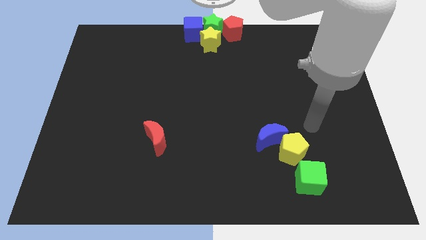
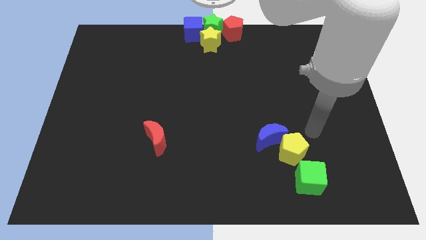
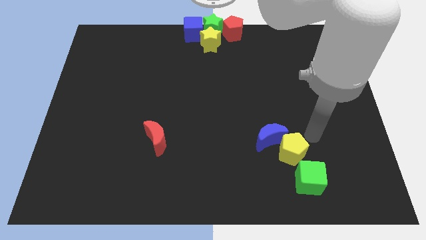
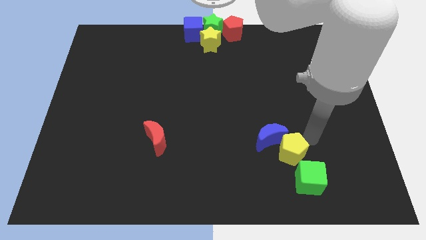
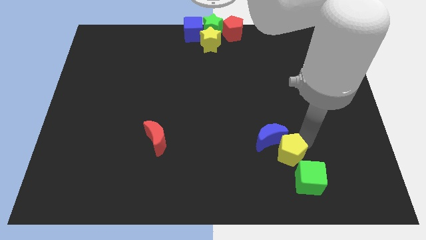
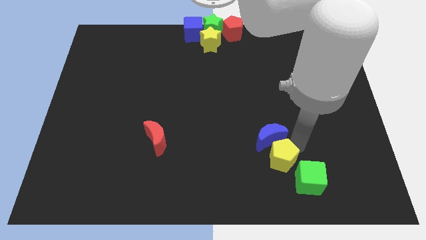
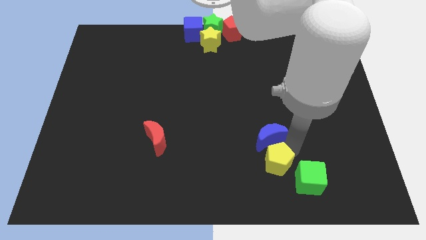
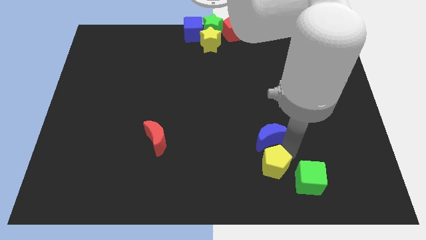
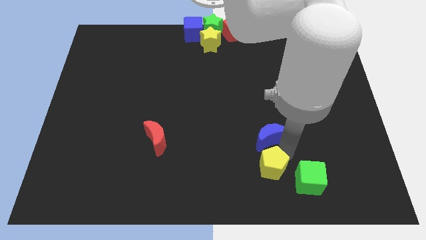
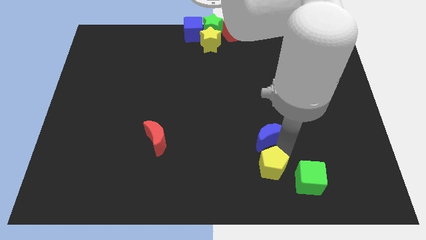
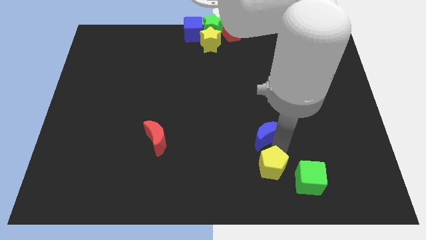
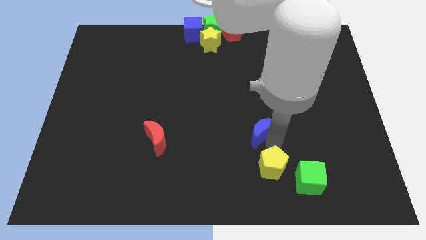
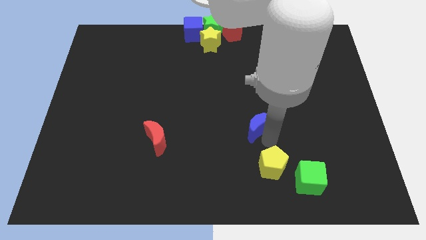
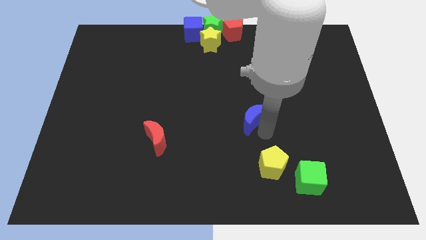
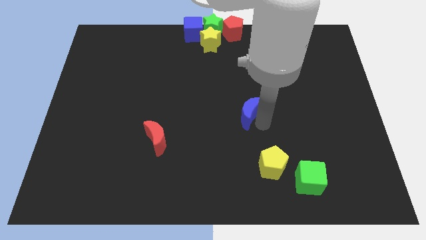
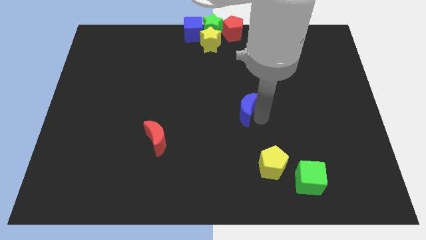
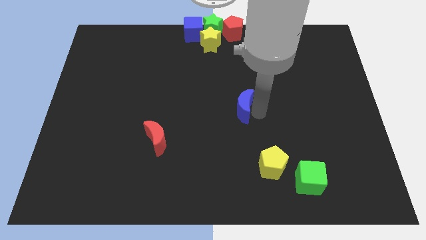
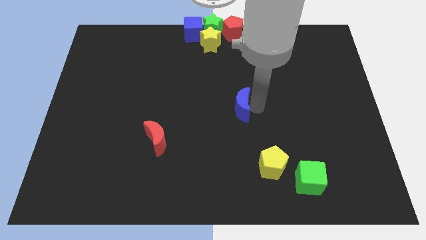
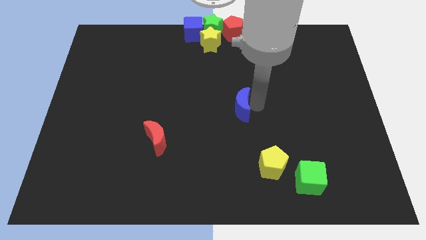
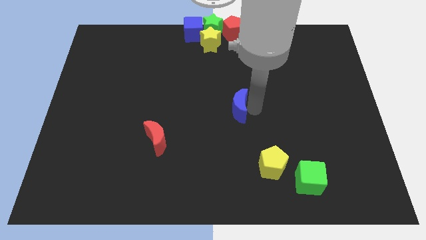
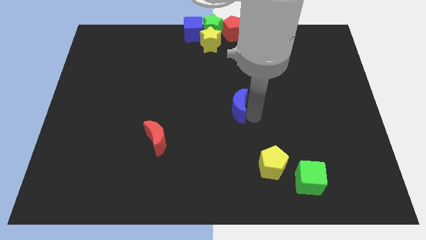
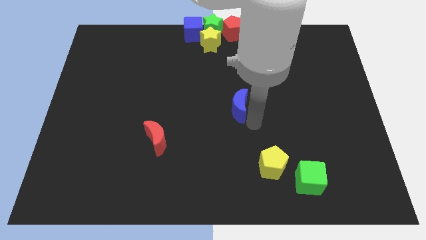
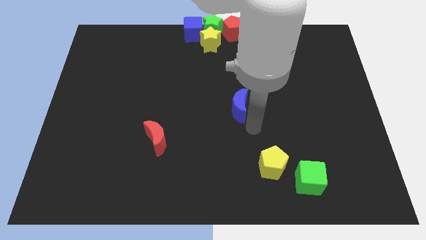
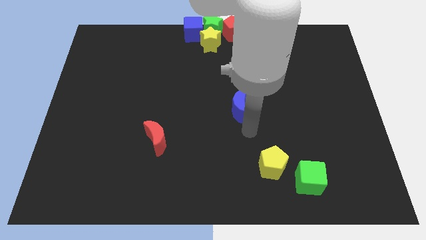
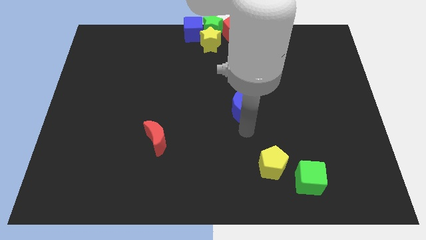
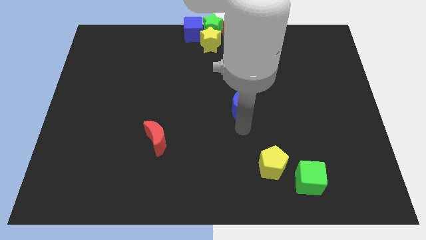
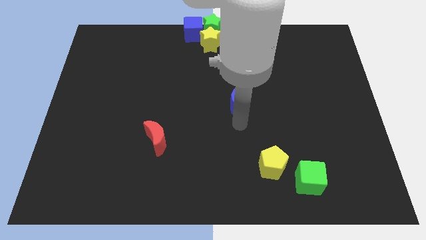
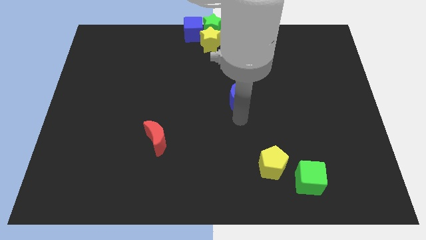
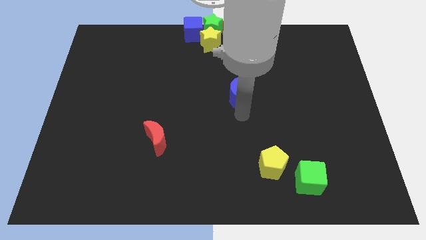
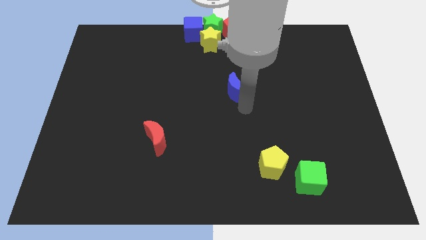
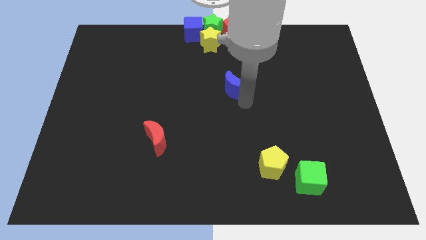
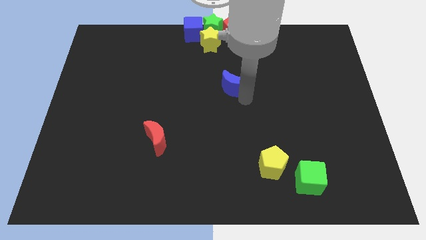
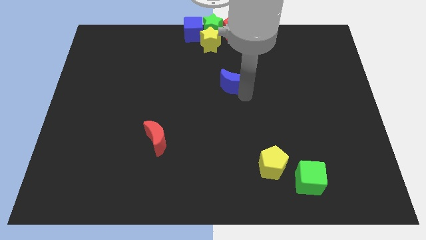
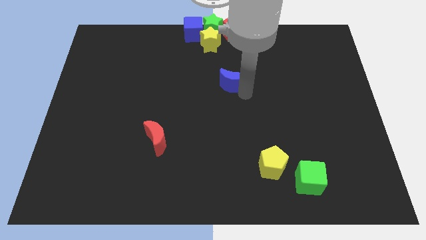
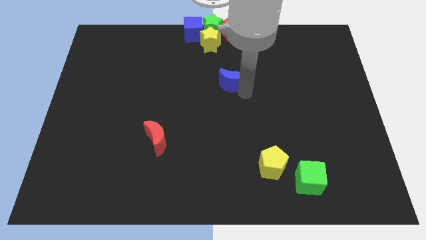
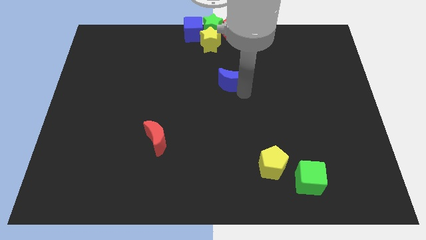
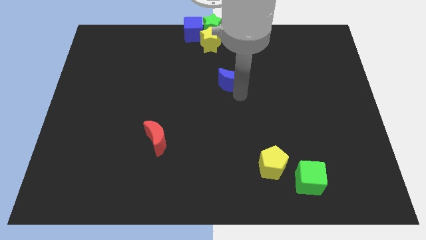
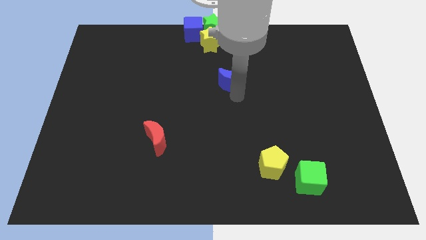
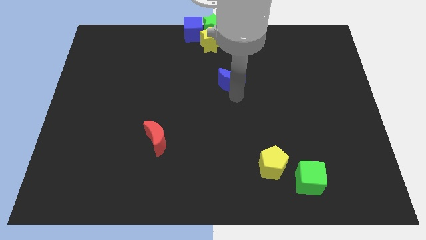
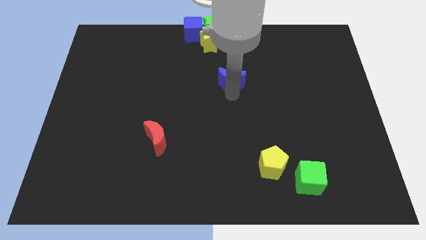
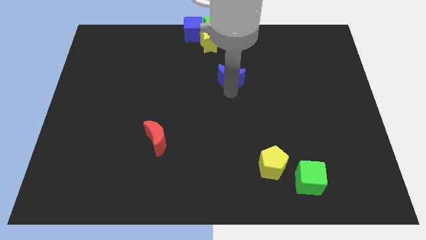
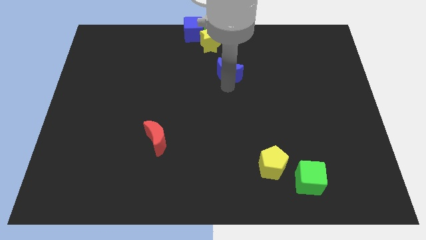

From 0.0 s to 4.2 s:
place yellow pentagon and blue crescent apart

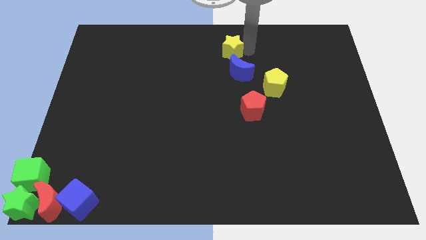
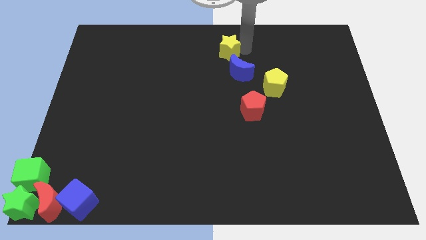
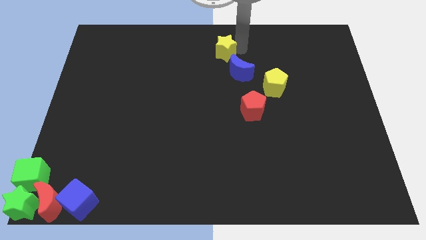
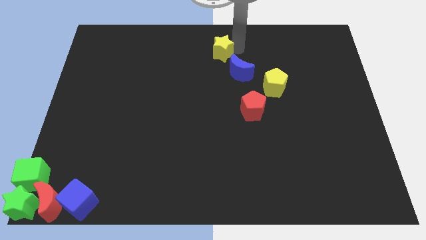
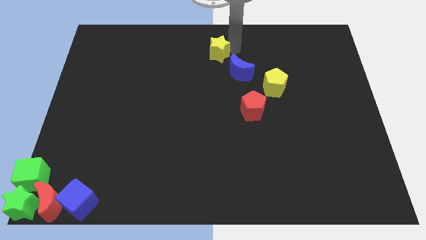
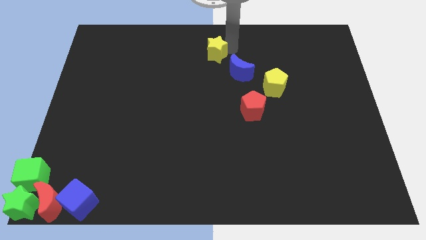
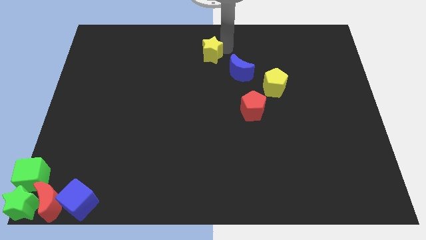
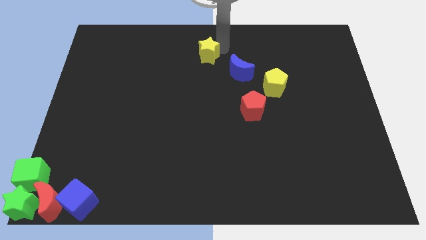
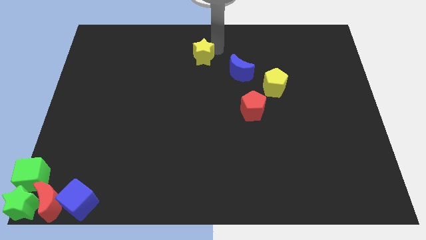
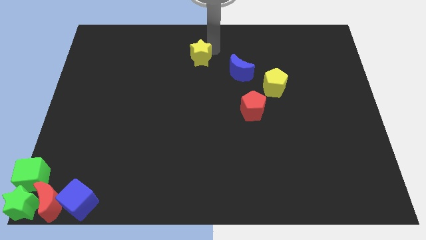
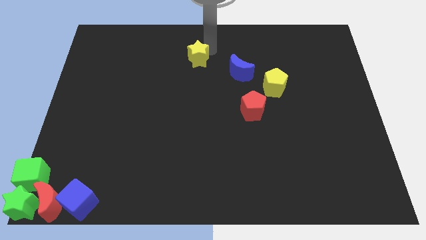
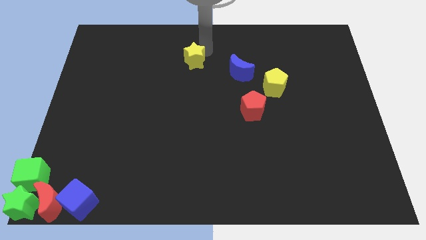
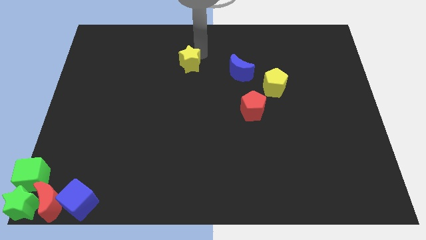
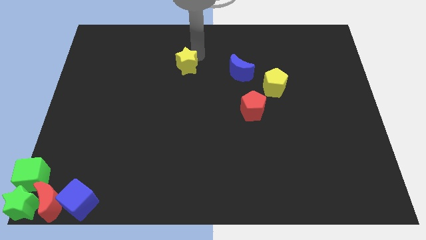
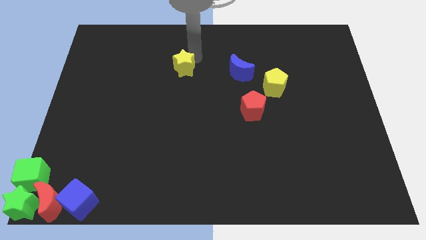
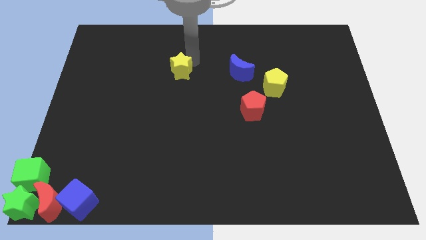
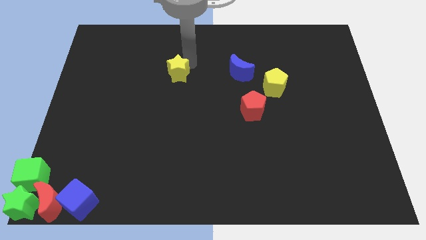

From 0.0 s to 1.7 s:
place the yellow star to the left of the blue moon

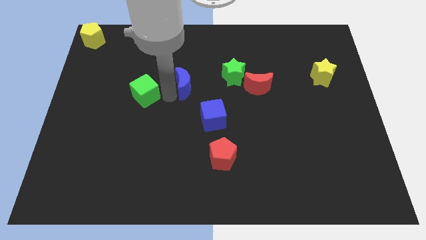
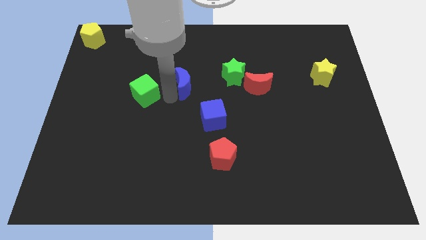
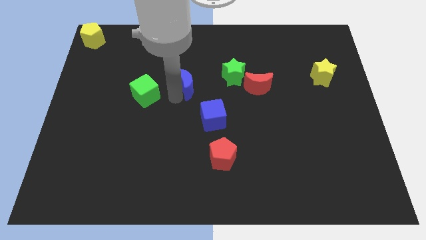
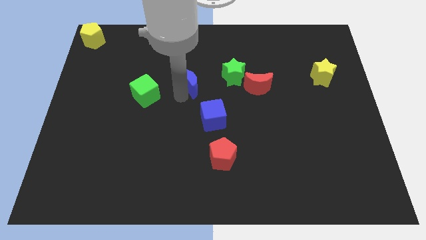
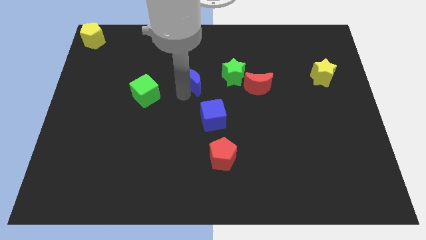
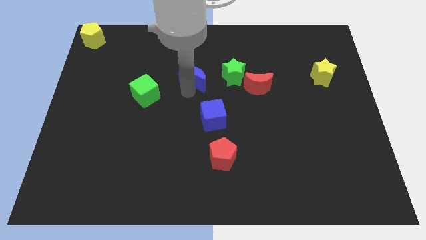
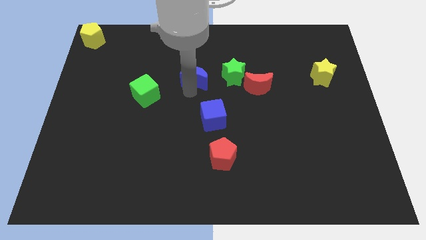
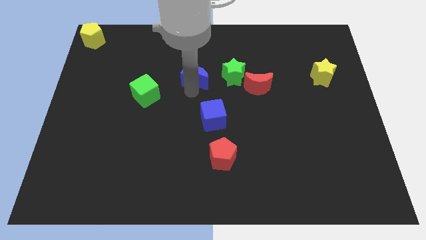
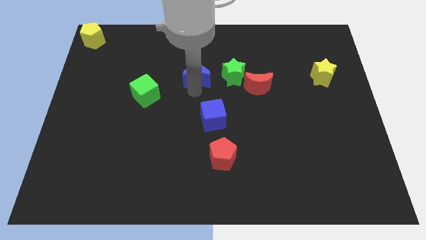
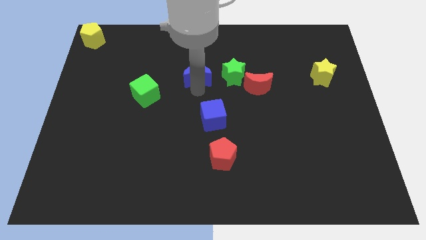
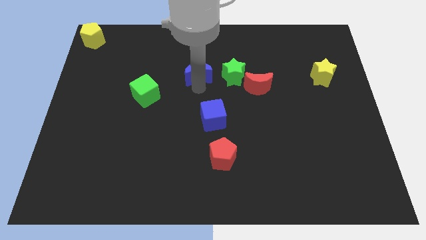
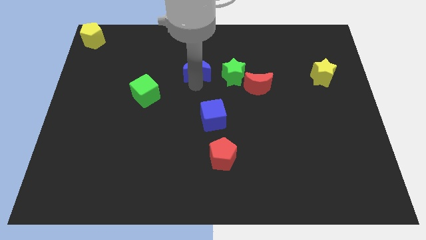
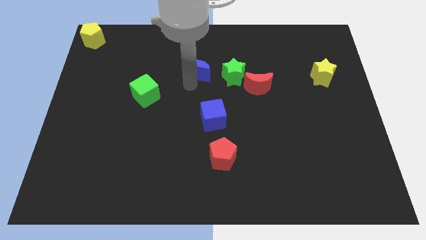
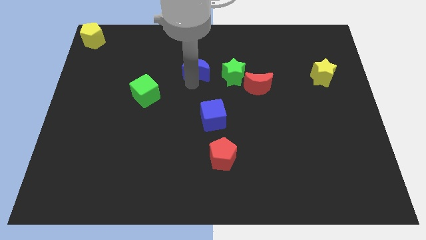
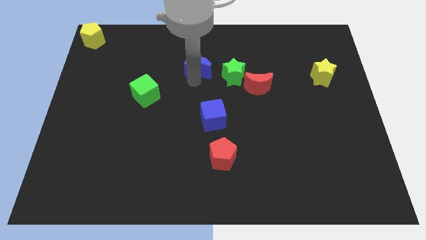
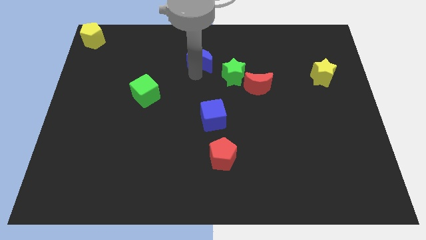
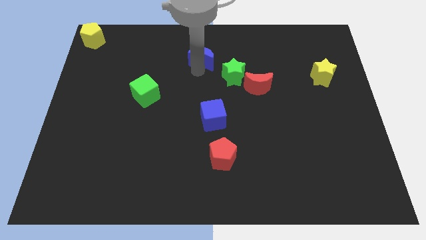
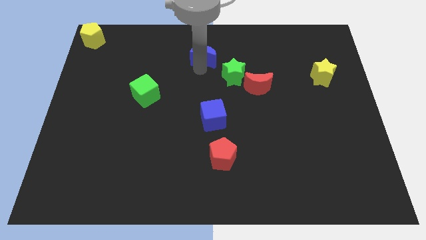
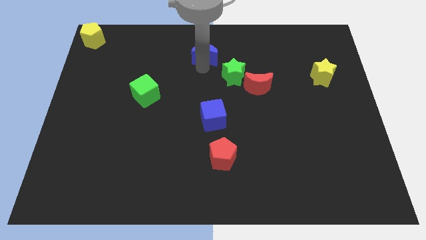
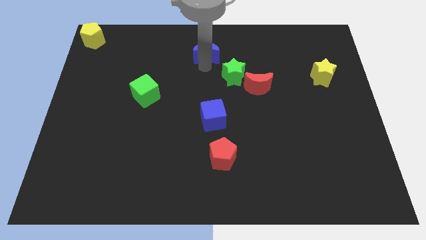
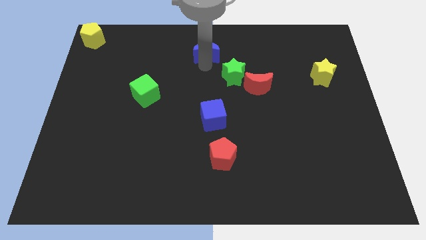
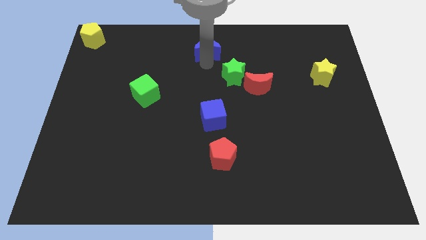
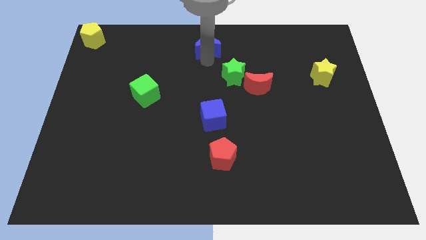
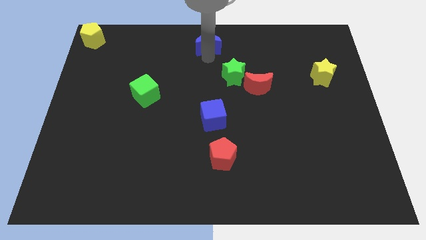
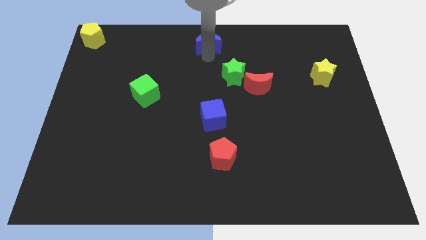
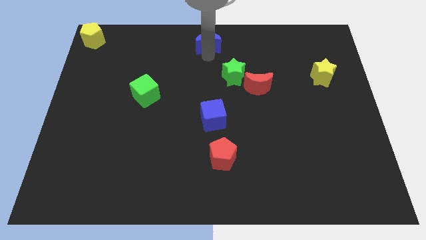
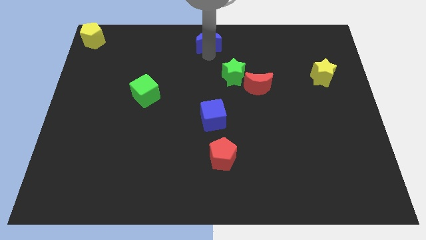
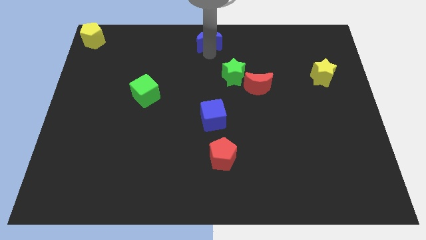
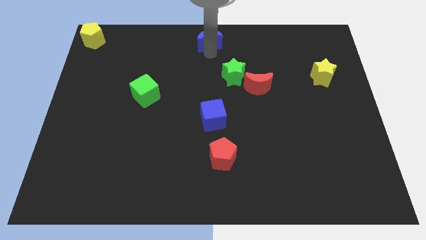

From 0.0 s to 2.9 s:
push the blue crescent towards the top center of the board

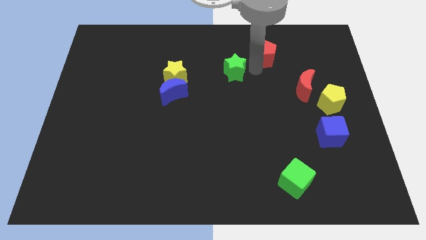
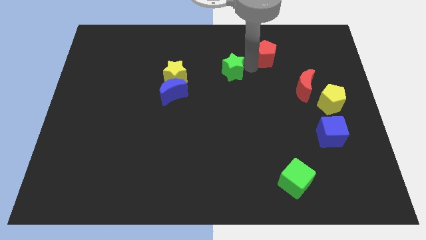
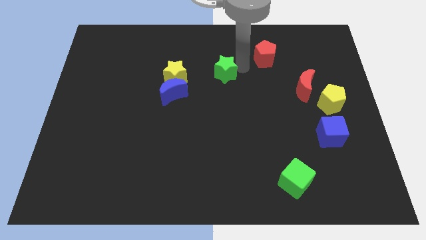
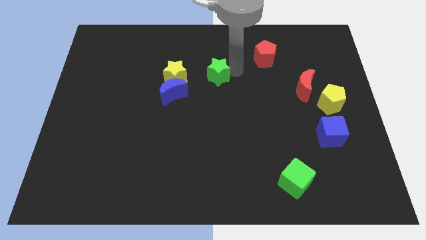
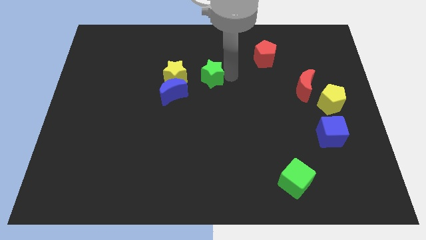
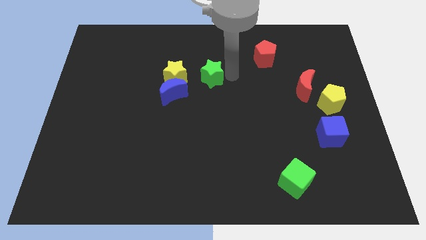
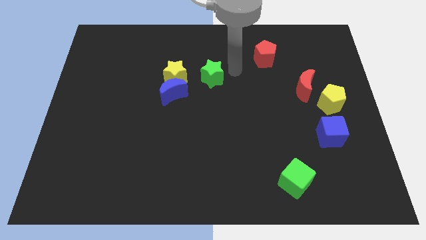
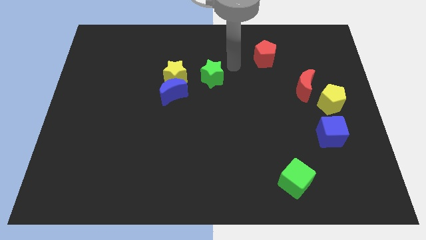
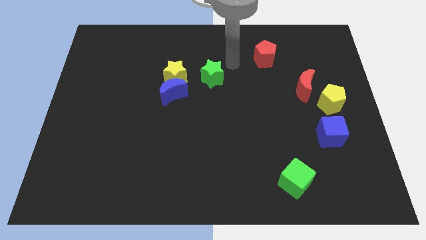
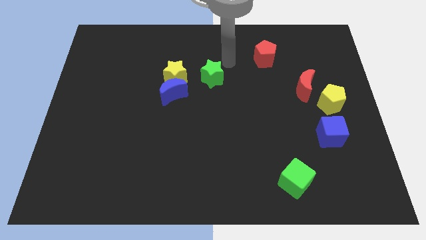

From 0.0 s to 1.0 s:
move the green star to the right of the yellow star
